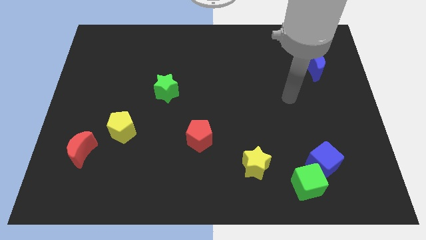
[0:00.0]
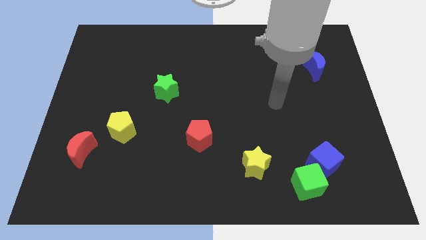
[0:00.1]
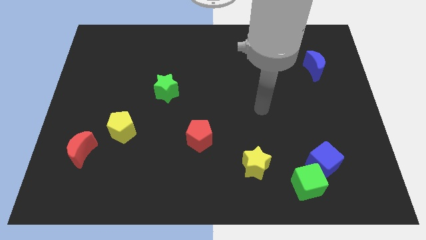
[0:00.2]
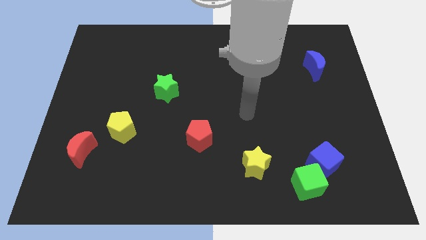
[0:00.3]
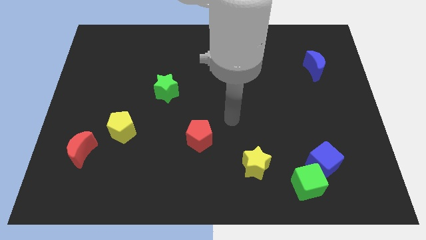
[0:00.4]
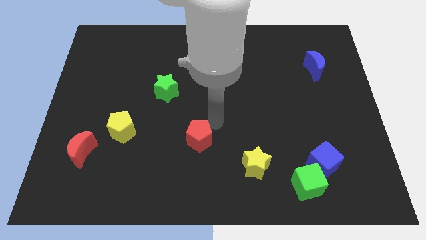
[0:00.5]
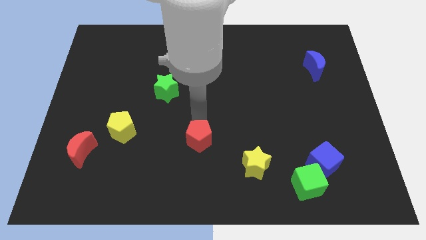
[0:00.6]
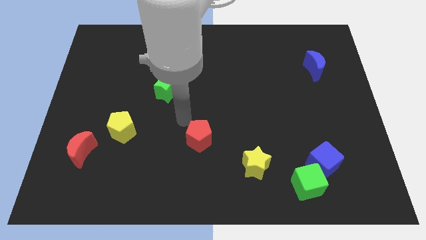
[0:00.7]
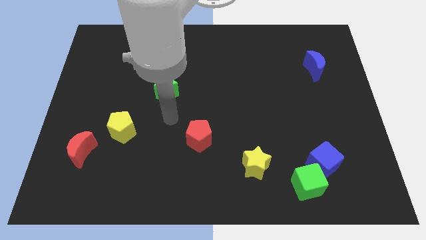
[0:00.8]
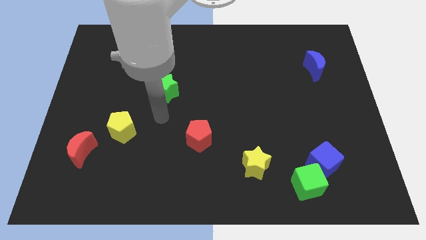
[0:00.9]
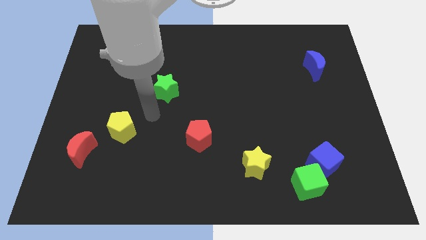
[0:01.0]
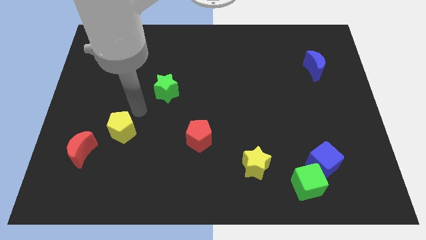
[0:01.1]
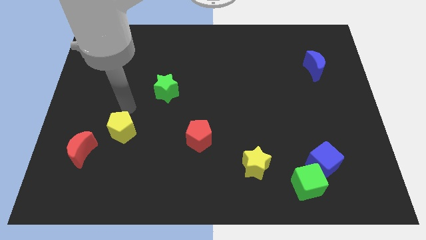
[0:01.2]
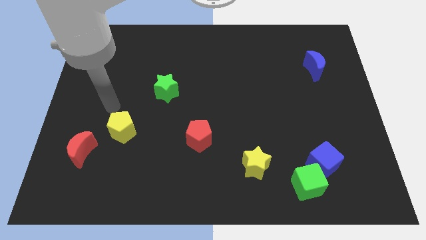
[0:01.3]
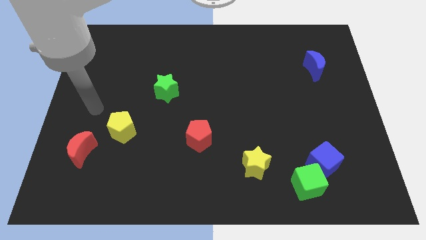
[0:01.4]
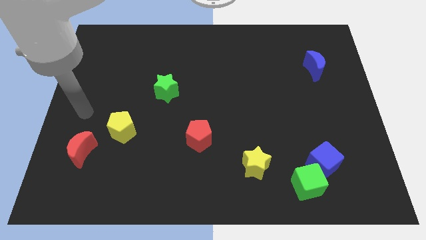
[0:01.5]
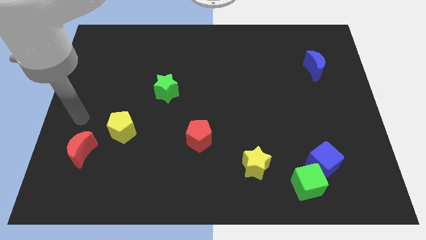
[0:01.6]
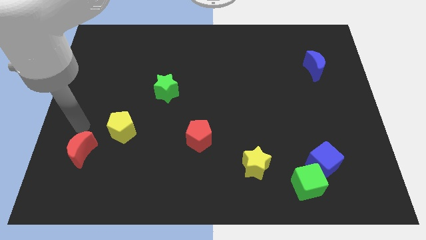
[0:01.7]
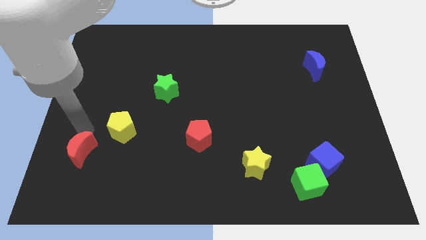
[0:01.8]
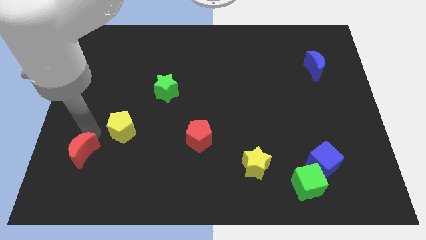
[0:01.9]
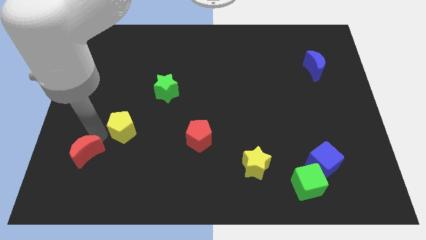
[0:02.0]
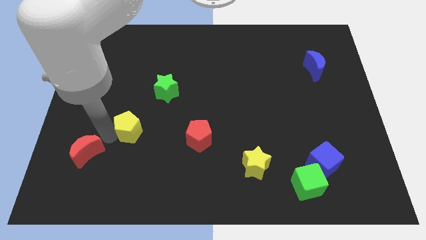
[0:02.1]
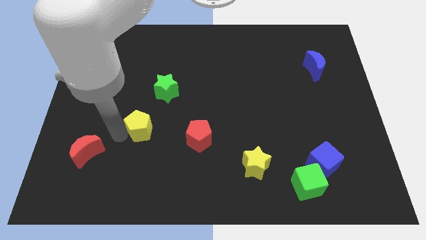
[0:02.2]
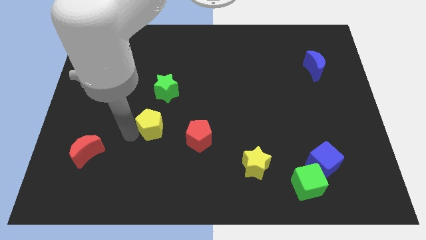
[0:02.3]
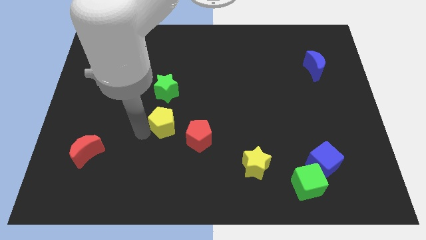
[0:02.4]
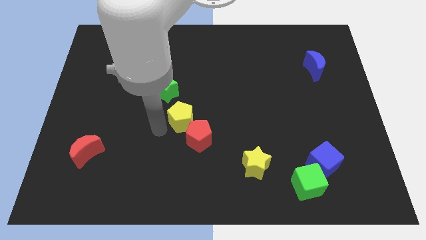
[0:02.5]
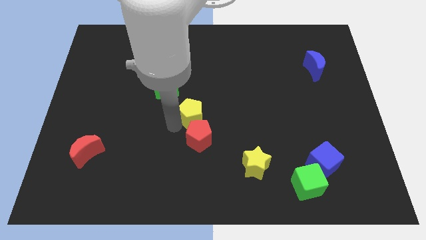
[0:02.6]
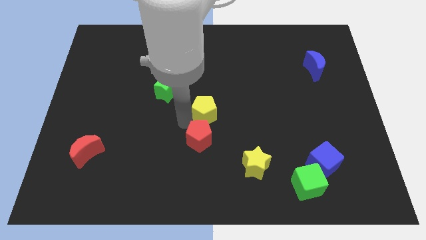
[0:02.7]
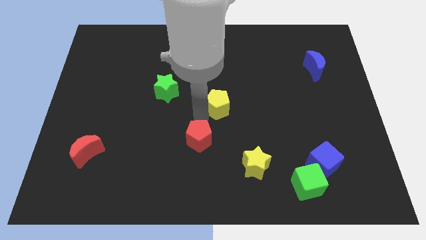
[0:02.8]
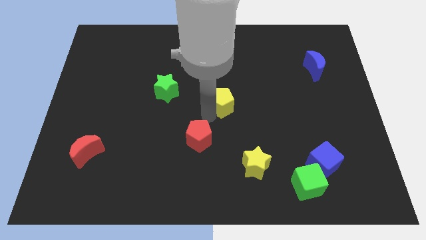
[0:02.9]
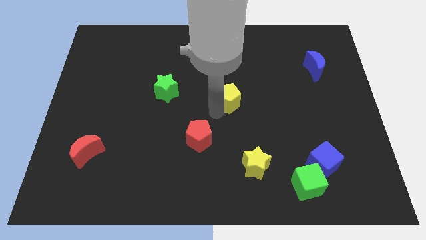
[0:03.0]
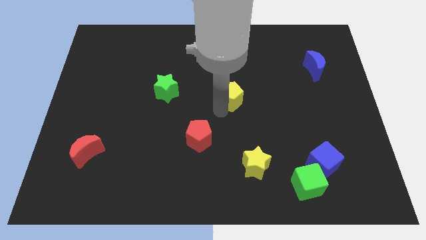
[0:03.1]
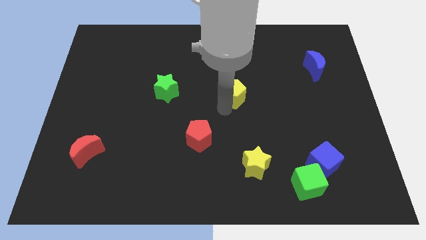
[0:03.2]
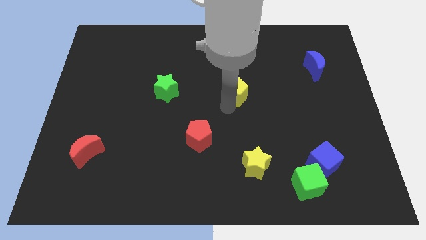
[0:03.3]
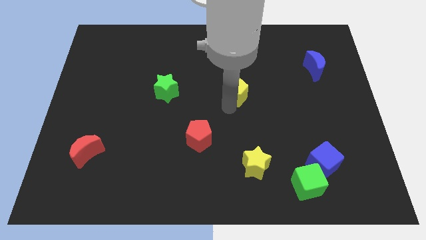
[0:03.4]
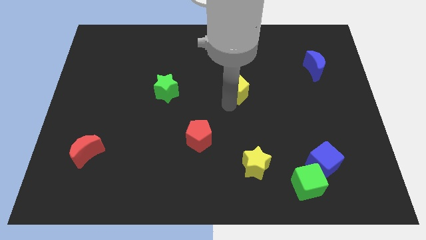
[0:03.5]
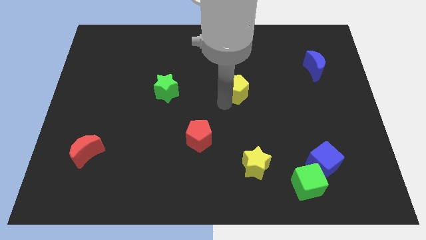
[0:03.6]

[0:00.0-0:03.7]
place the yellow pentagon to the right of the green star

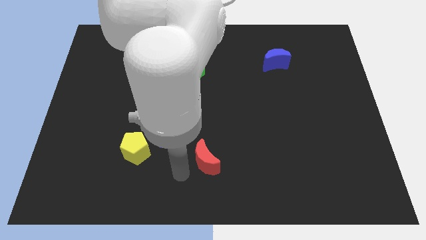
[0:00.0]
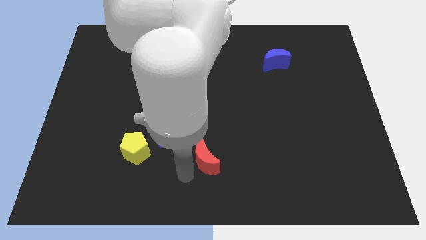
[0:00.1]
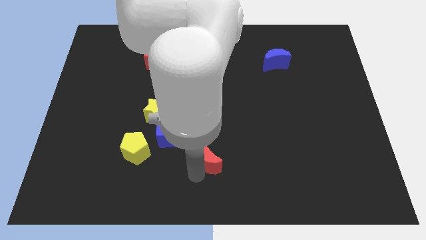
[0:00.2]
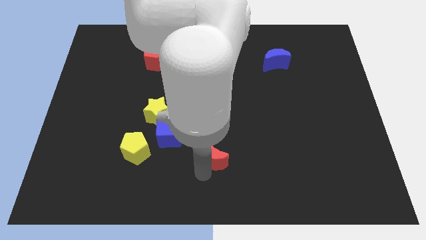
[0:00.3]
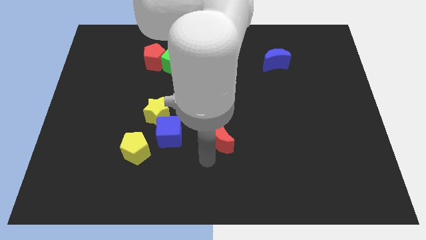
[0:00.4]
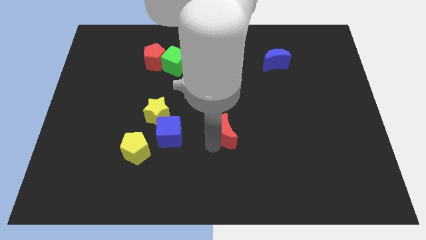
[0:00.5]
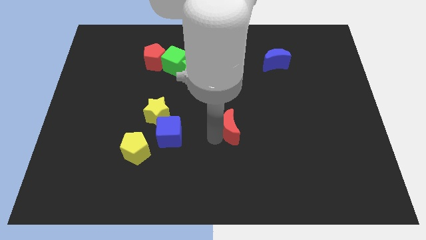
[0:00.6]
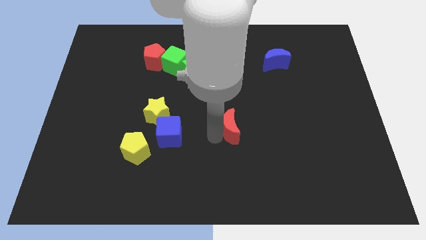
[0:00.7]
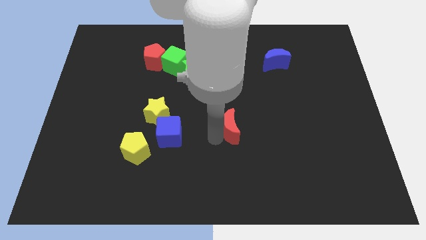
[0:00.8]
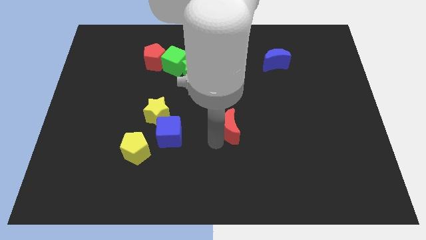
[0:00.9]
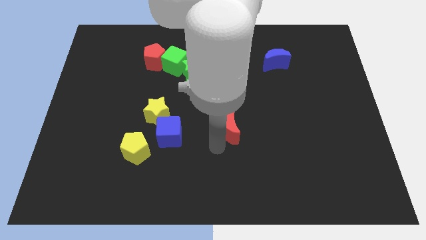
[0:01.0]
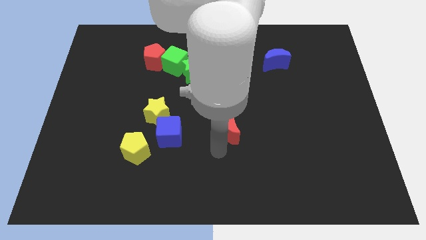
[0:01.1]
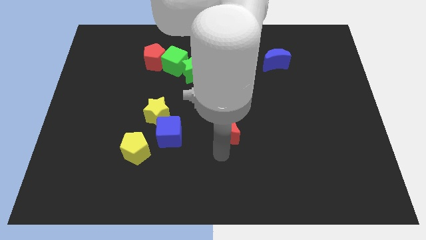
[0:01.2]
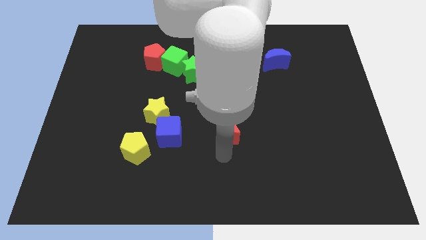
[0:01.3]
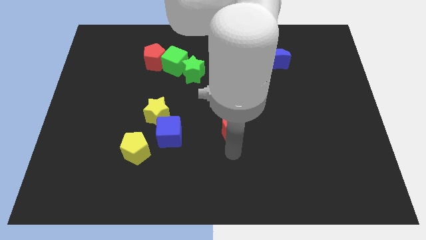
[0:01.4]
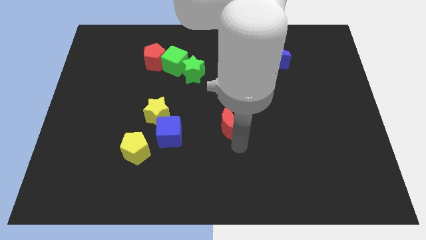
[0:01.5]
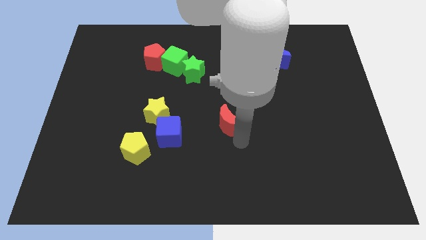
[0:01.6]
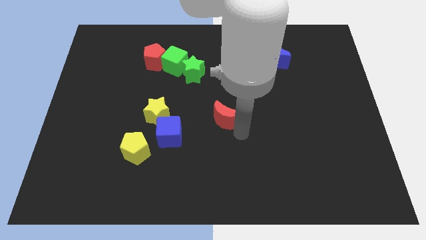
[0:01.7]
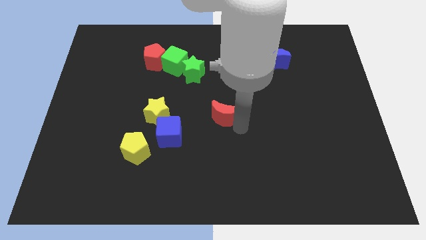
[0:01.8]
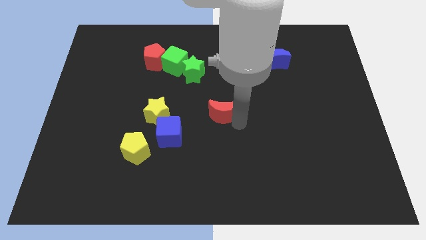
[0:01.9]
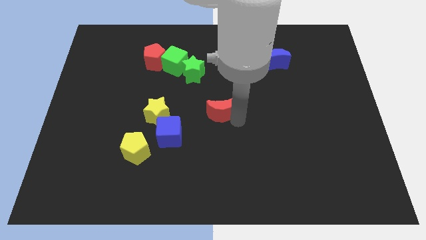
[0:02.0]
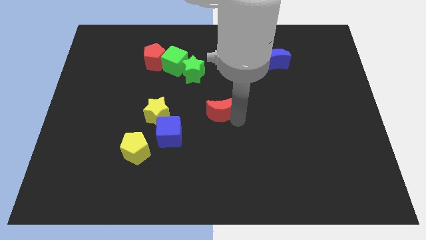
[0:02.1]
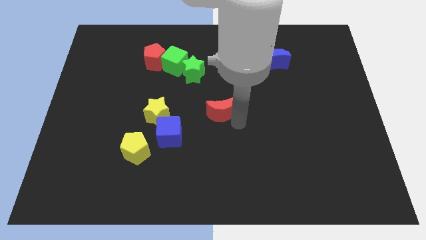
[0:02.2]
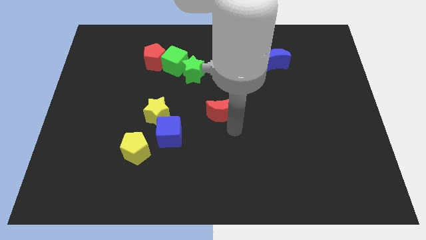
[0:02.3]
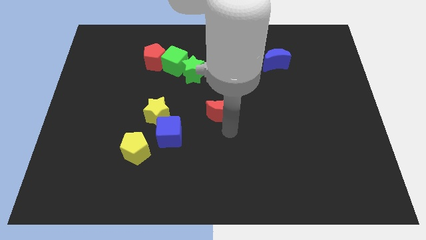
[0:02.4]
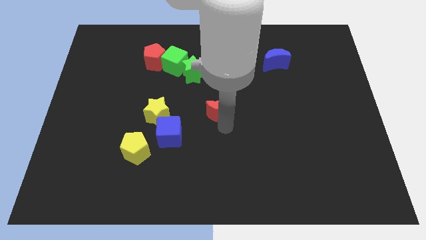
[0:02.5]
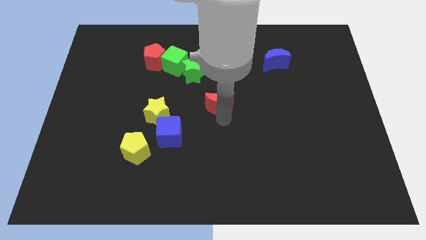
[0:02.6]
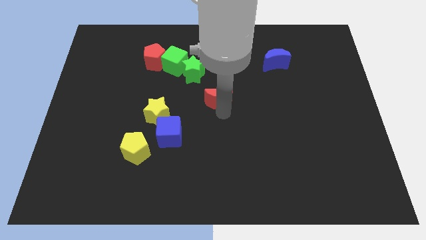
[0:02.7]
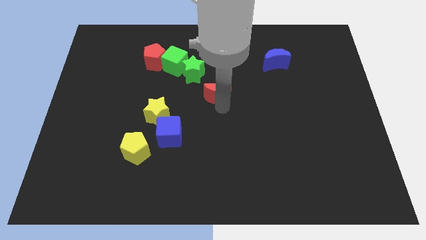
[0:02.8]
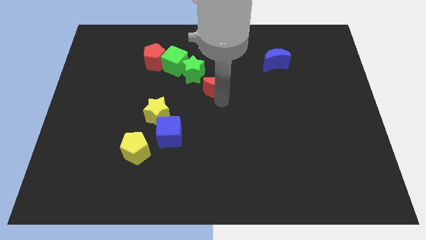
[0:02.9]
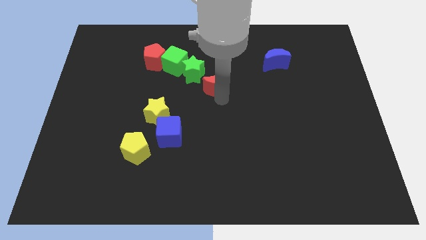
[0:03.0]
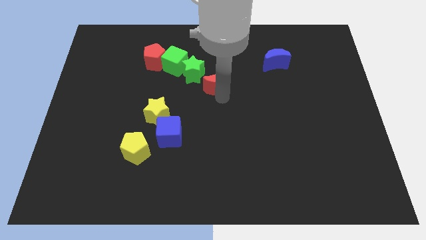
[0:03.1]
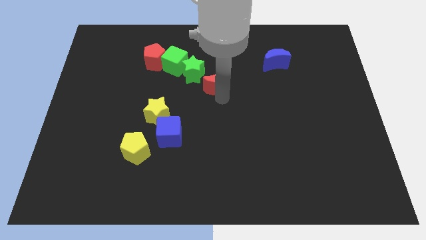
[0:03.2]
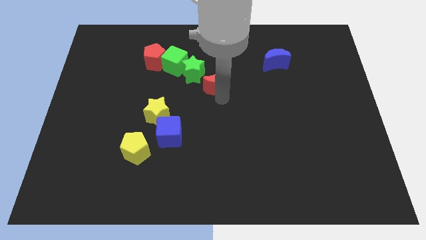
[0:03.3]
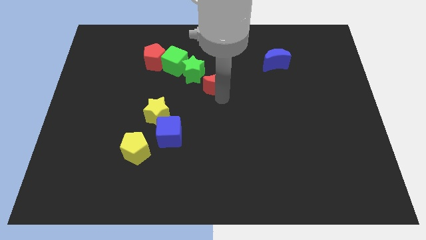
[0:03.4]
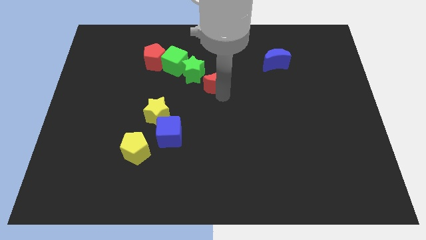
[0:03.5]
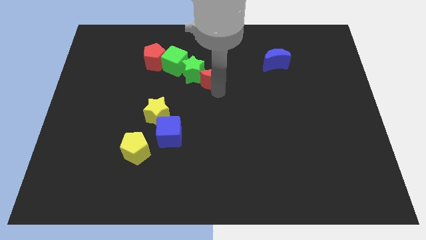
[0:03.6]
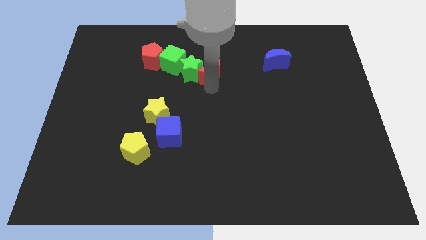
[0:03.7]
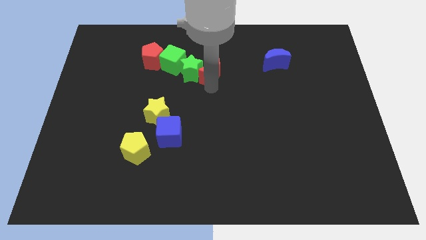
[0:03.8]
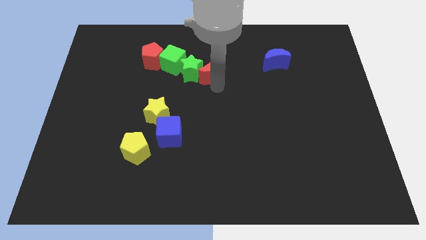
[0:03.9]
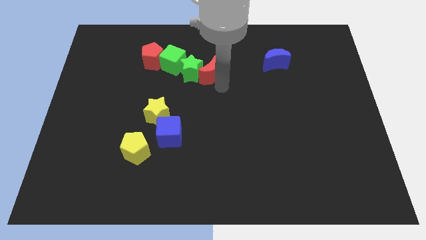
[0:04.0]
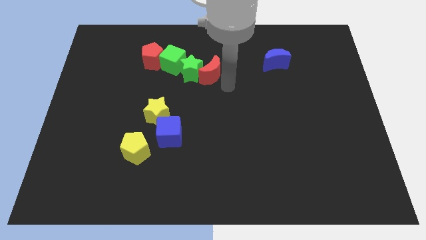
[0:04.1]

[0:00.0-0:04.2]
push the red crescent to the right side of the green star

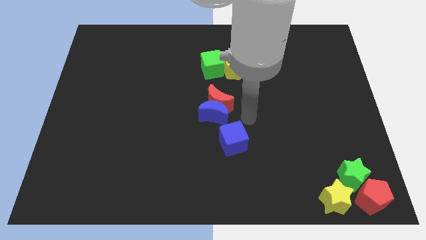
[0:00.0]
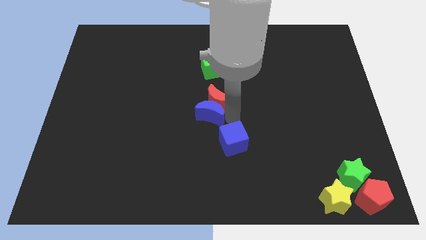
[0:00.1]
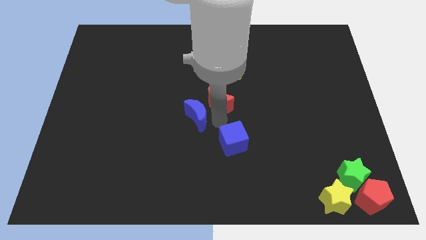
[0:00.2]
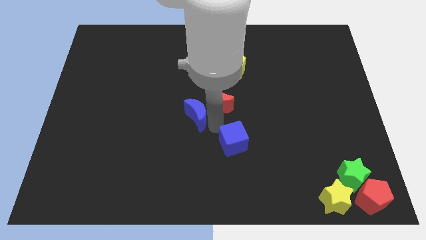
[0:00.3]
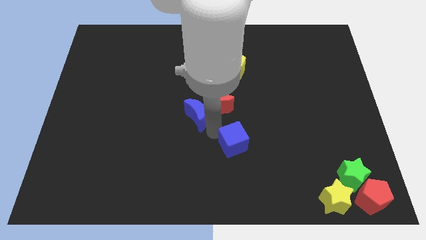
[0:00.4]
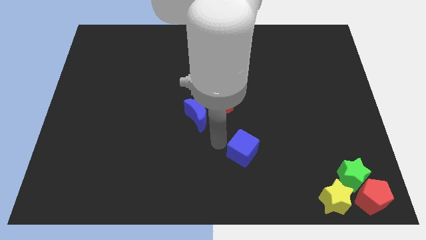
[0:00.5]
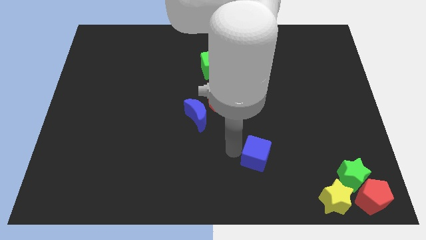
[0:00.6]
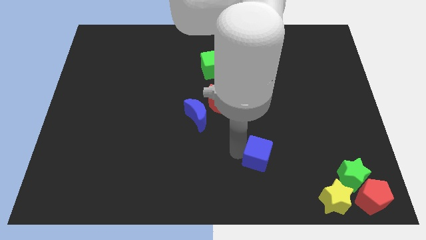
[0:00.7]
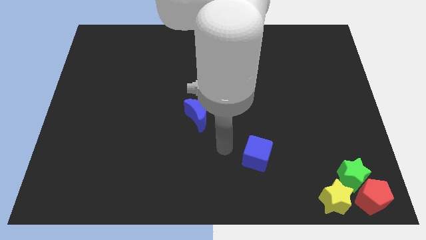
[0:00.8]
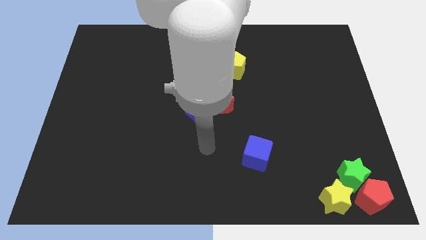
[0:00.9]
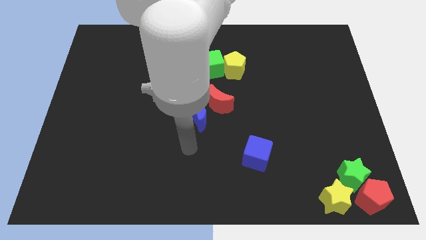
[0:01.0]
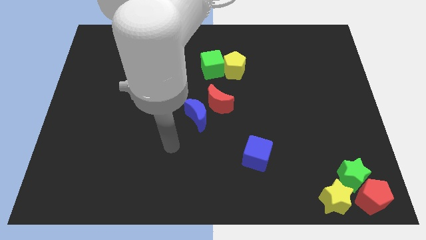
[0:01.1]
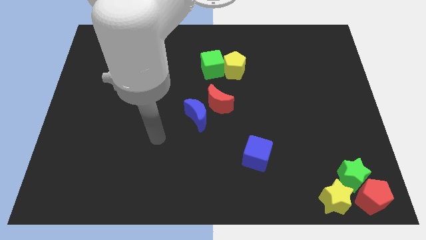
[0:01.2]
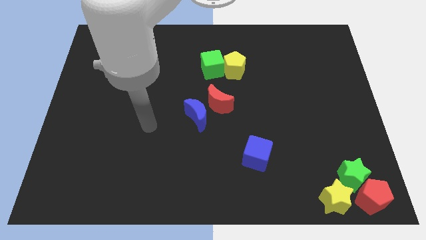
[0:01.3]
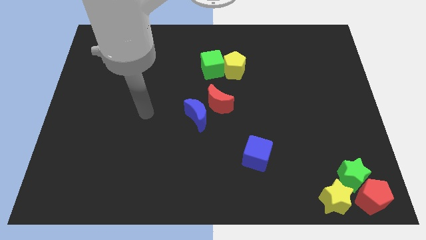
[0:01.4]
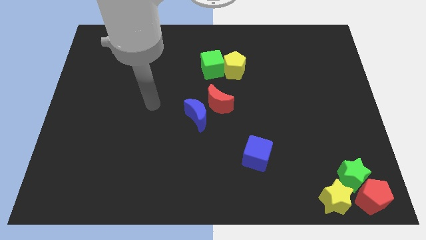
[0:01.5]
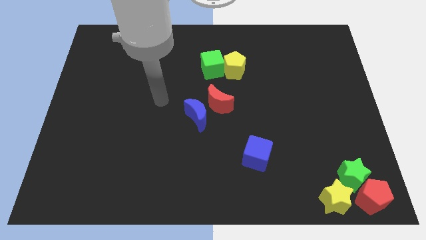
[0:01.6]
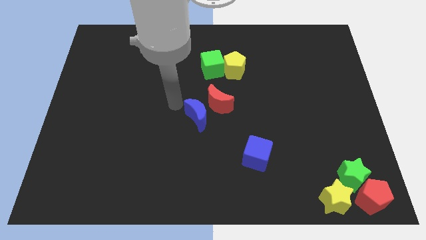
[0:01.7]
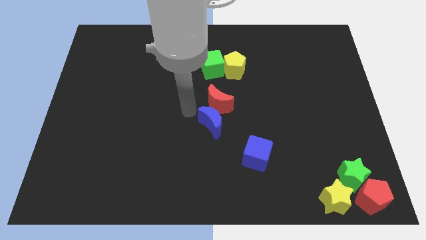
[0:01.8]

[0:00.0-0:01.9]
push the blue crescentblue cube away from the red crescent
